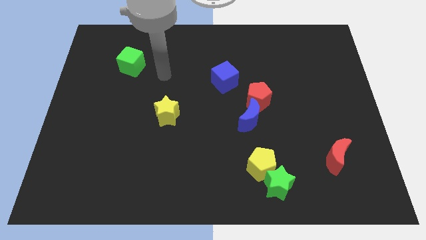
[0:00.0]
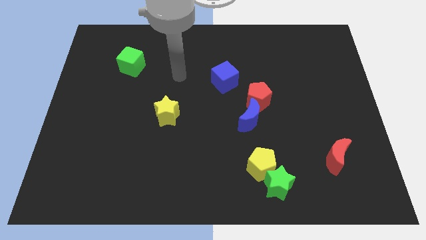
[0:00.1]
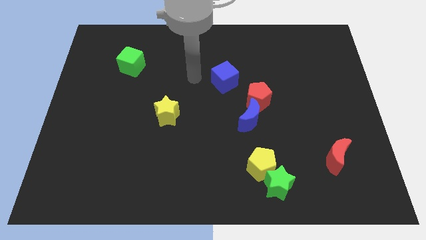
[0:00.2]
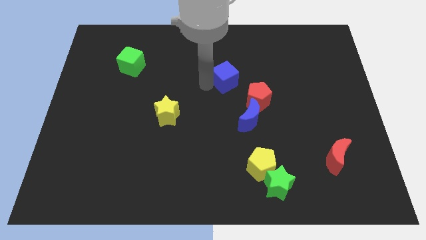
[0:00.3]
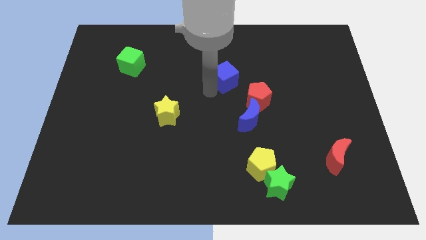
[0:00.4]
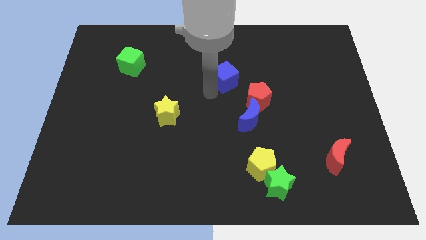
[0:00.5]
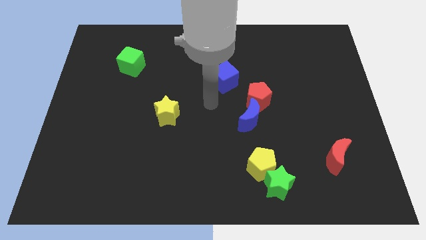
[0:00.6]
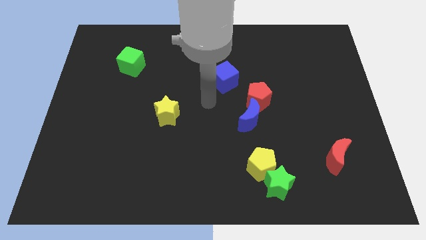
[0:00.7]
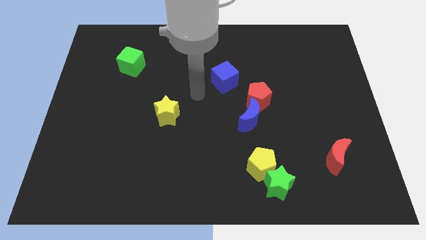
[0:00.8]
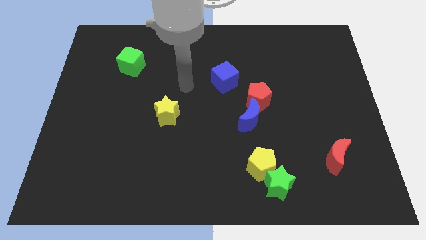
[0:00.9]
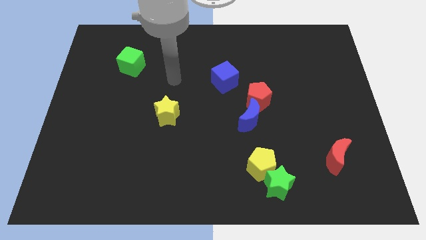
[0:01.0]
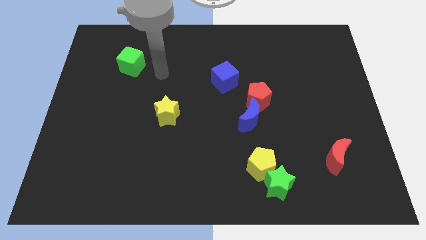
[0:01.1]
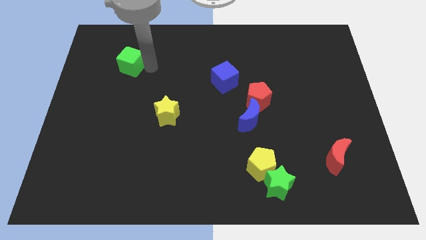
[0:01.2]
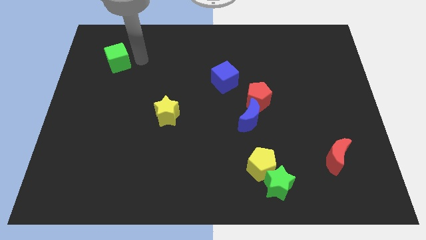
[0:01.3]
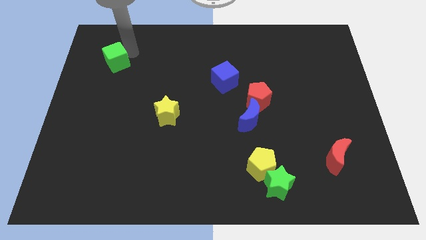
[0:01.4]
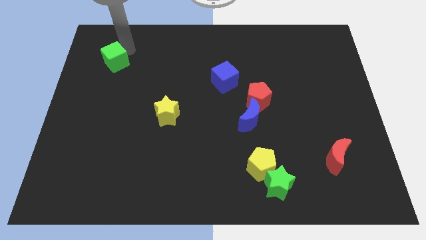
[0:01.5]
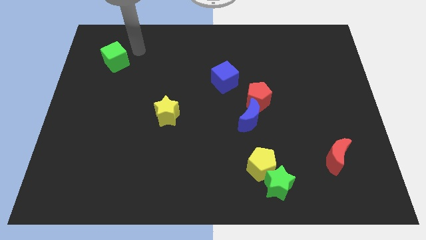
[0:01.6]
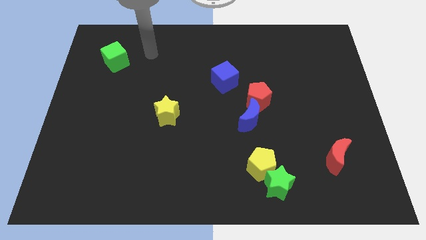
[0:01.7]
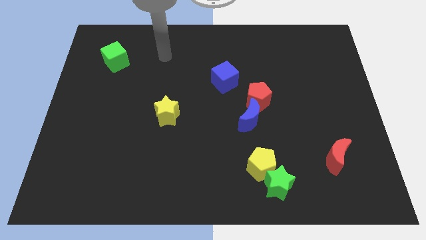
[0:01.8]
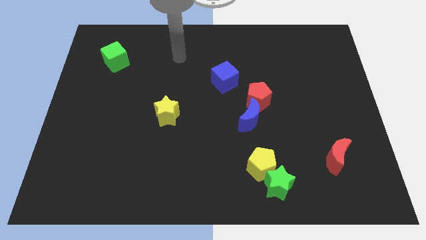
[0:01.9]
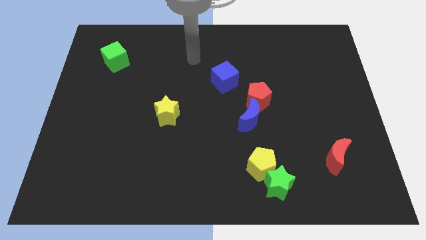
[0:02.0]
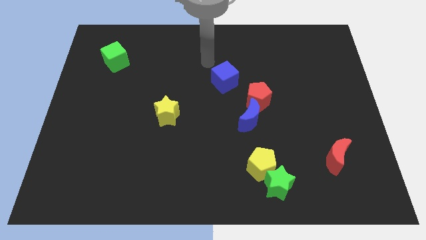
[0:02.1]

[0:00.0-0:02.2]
move the green cube slightly to the top left

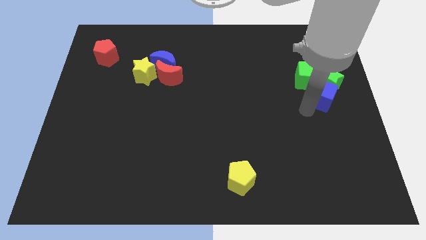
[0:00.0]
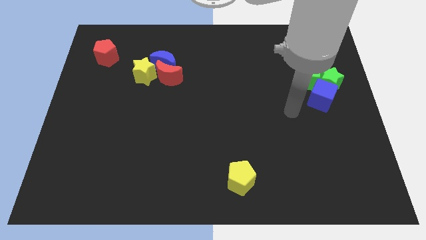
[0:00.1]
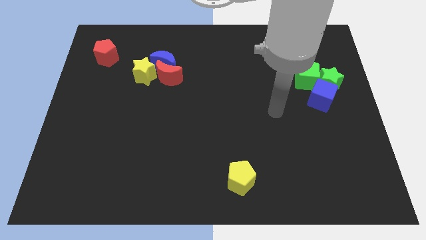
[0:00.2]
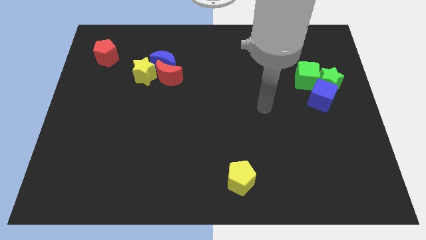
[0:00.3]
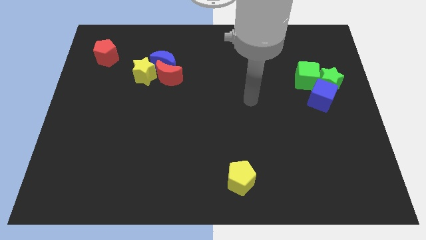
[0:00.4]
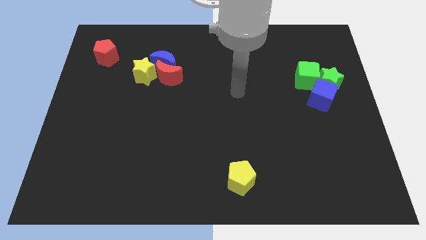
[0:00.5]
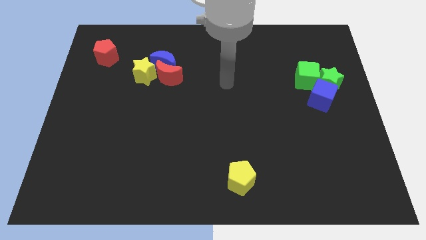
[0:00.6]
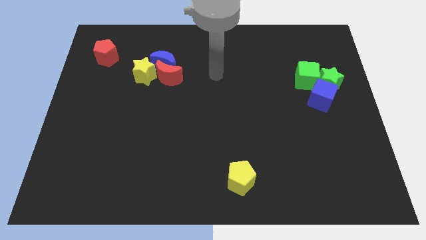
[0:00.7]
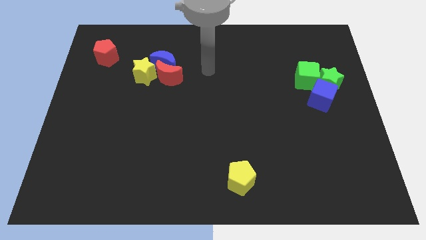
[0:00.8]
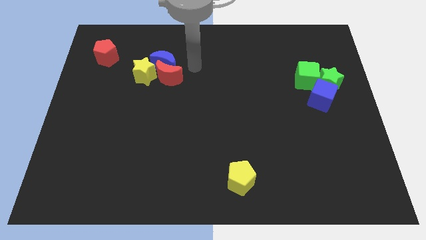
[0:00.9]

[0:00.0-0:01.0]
move the arm towards the blue moon

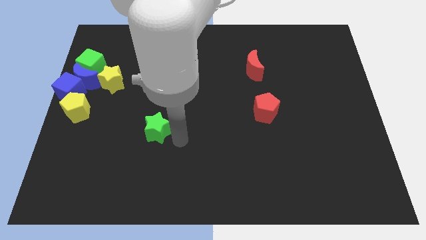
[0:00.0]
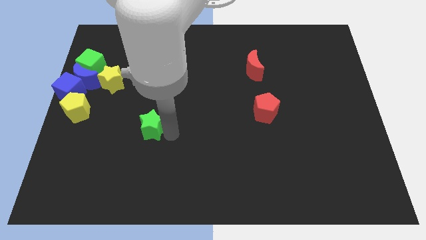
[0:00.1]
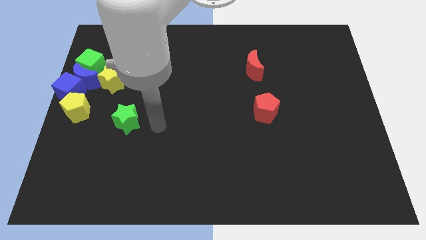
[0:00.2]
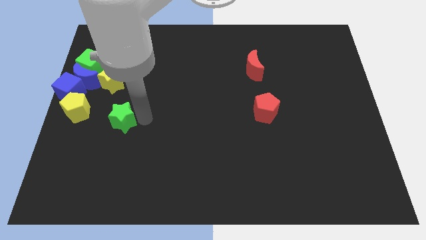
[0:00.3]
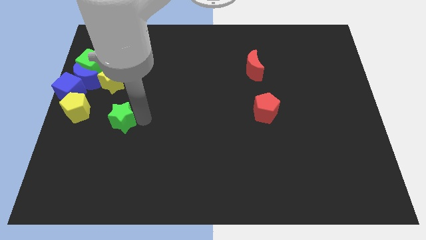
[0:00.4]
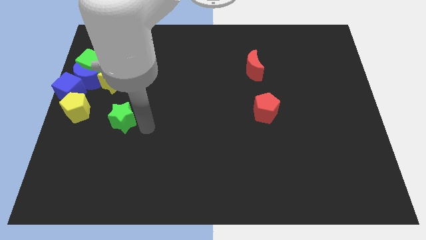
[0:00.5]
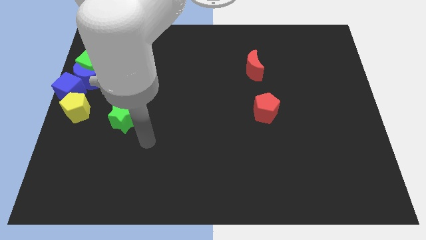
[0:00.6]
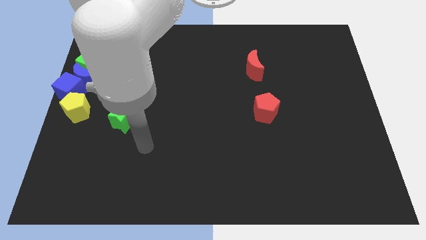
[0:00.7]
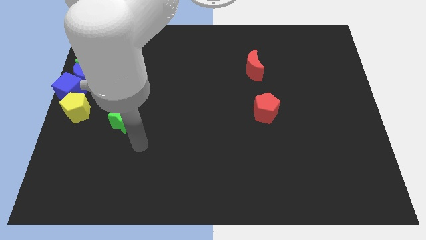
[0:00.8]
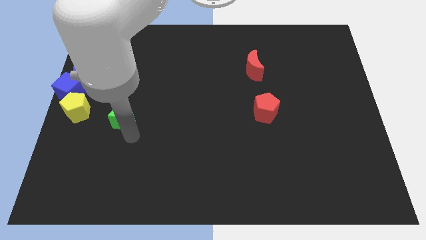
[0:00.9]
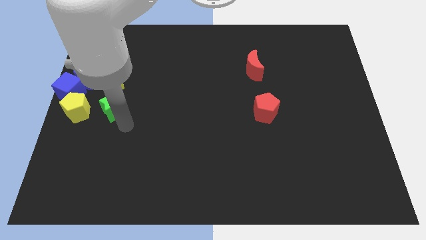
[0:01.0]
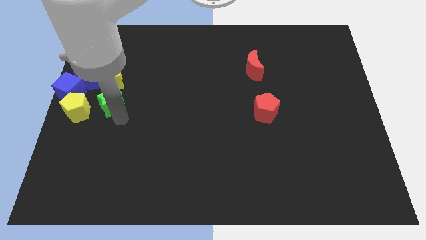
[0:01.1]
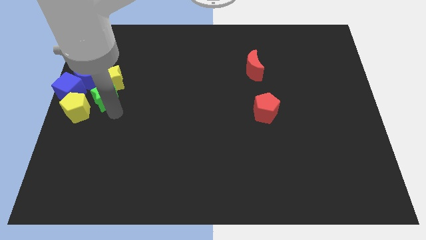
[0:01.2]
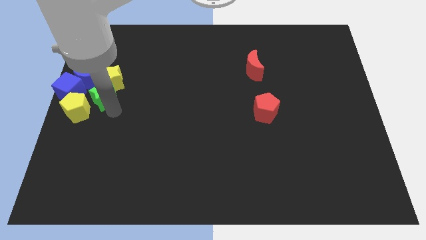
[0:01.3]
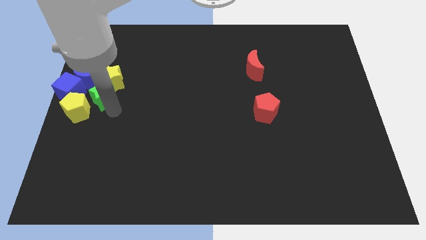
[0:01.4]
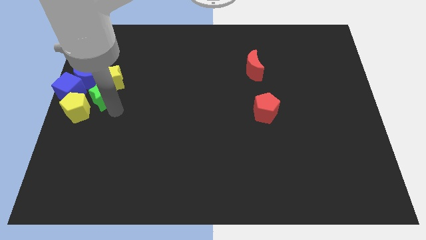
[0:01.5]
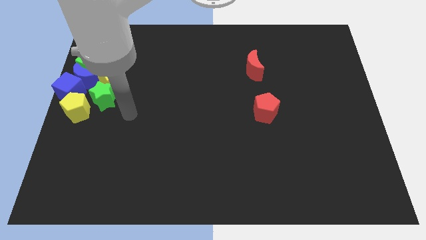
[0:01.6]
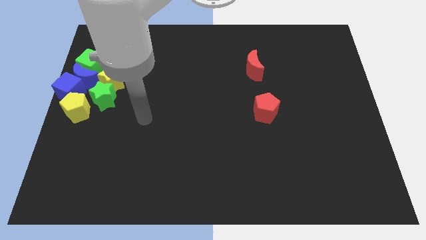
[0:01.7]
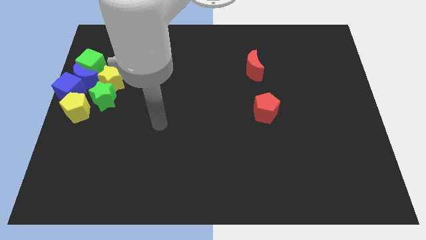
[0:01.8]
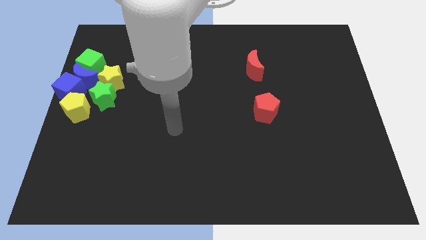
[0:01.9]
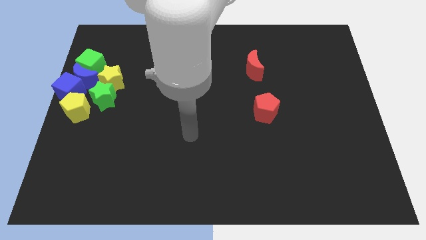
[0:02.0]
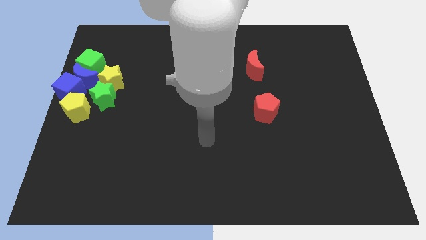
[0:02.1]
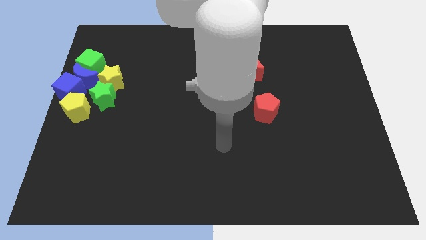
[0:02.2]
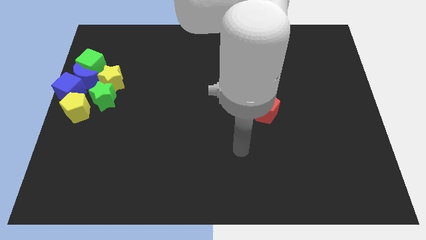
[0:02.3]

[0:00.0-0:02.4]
move the green star diagonal to the blue moon

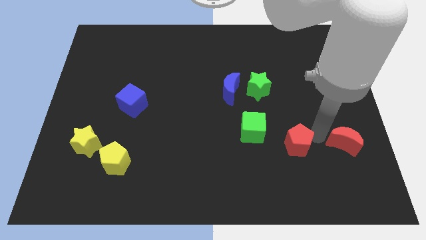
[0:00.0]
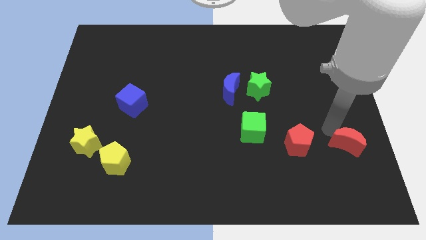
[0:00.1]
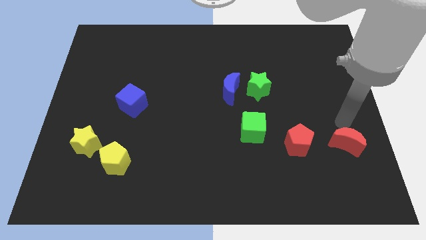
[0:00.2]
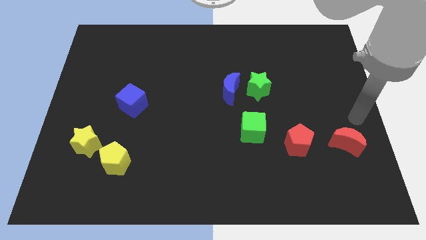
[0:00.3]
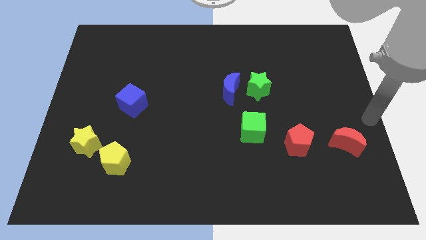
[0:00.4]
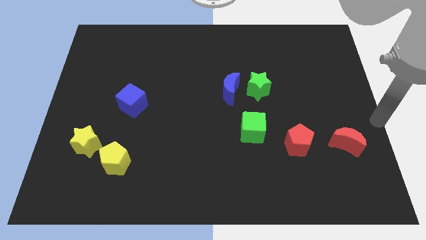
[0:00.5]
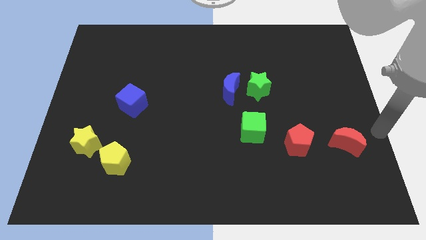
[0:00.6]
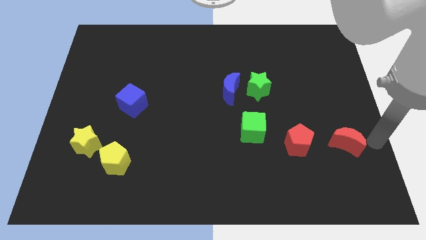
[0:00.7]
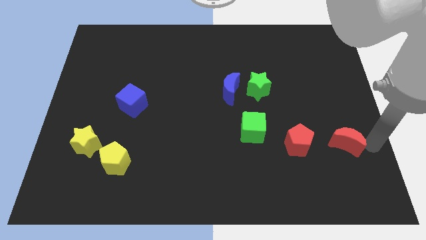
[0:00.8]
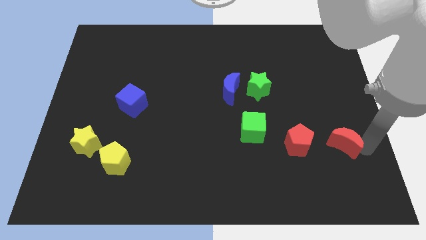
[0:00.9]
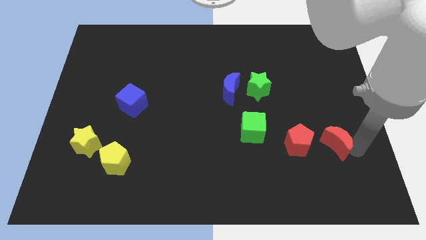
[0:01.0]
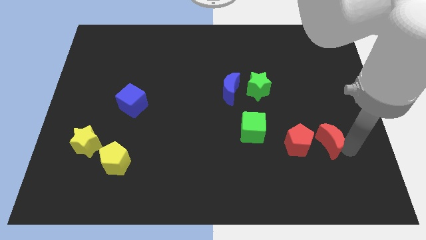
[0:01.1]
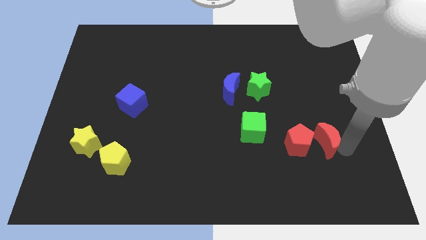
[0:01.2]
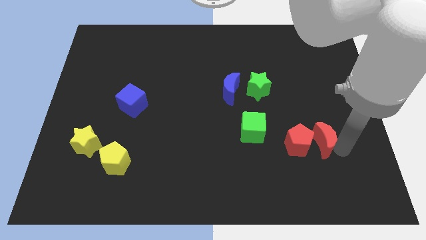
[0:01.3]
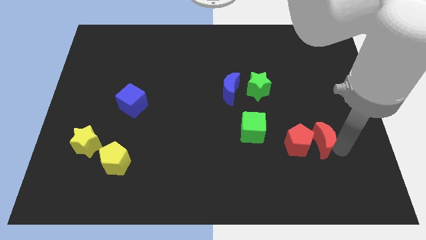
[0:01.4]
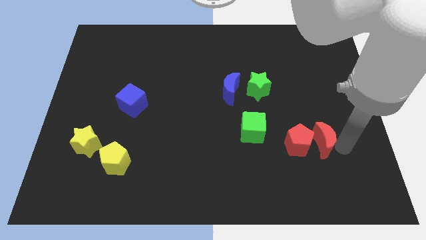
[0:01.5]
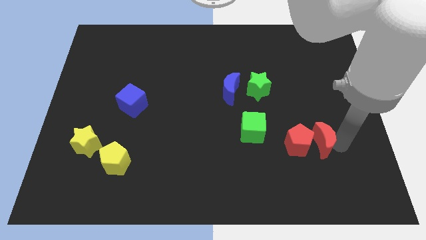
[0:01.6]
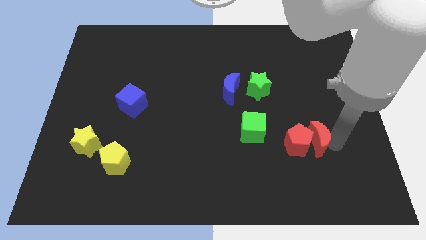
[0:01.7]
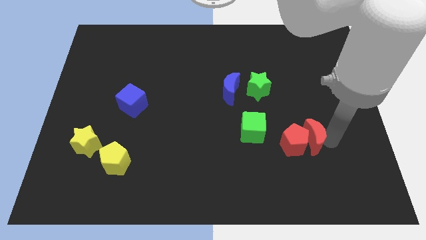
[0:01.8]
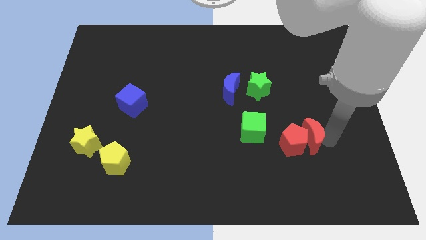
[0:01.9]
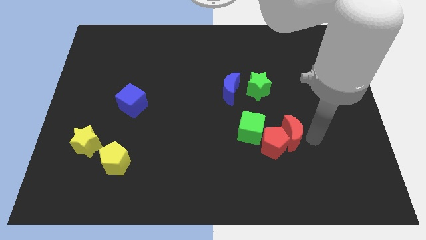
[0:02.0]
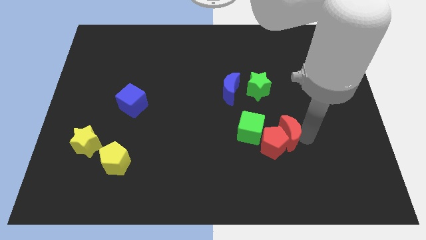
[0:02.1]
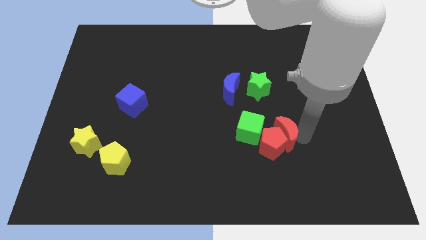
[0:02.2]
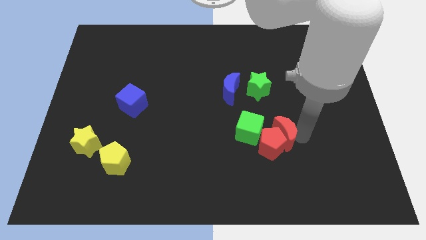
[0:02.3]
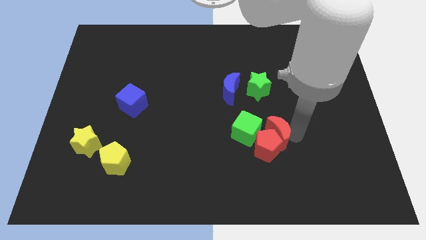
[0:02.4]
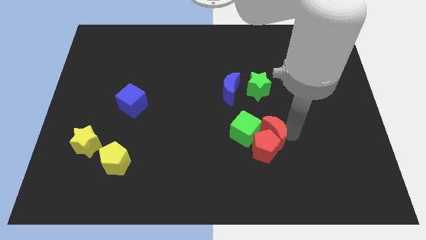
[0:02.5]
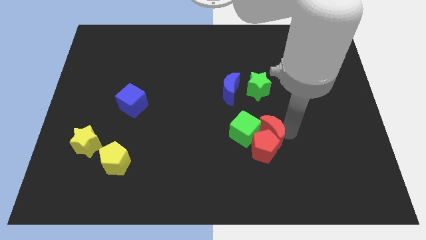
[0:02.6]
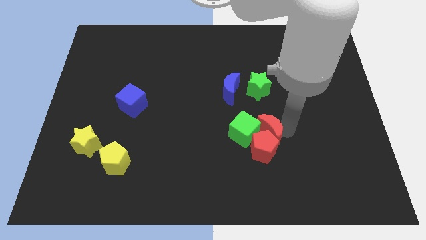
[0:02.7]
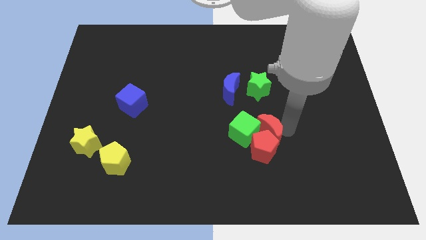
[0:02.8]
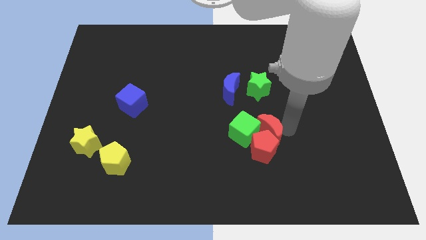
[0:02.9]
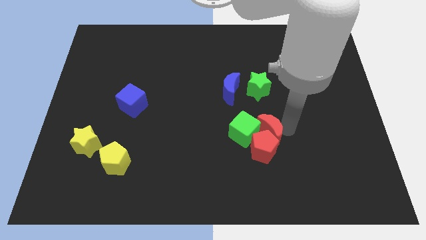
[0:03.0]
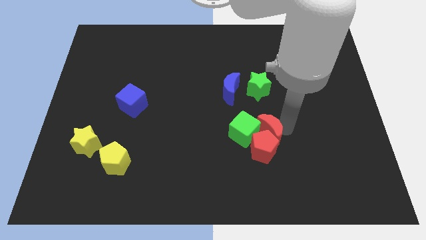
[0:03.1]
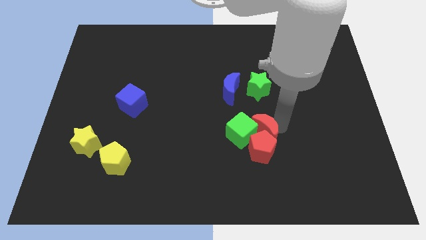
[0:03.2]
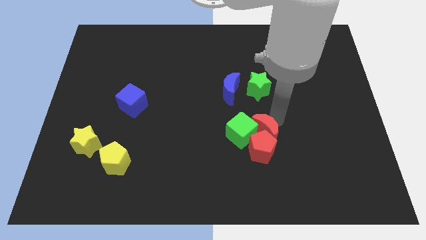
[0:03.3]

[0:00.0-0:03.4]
push the red blocks into the green cube
